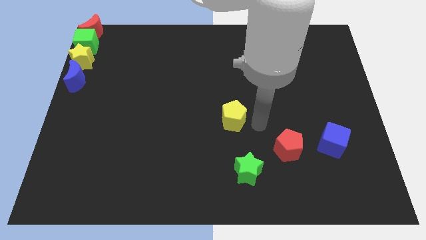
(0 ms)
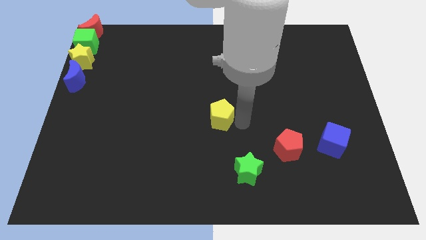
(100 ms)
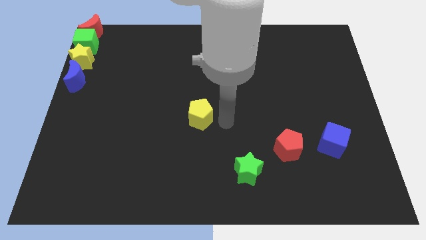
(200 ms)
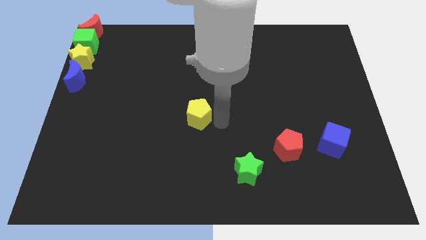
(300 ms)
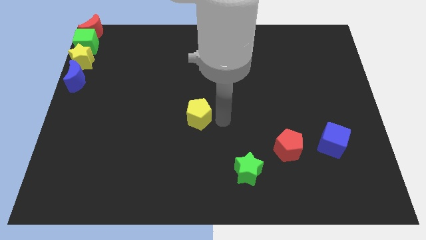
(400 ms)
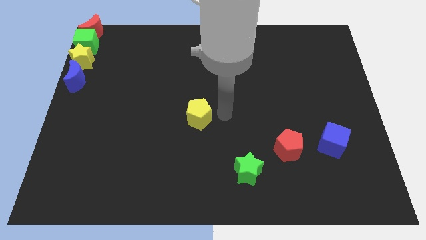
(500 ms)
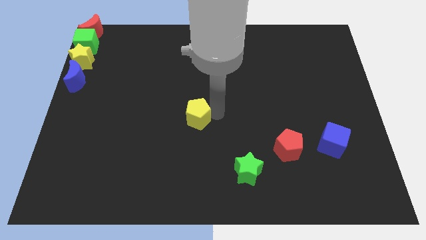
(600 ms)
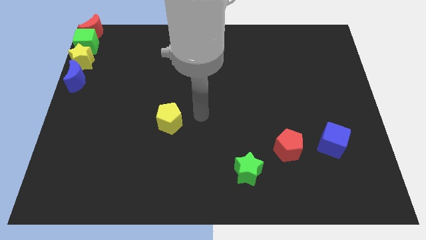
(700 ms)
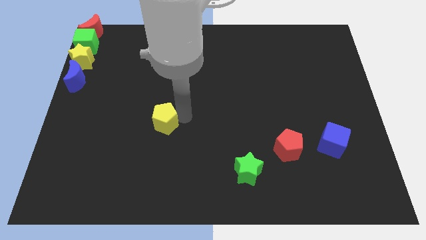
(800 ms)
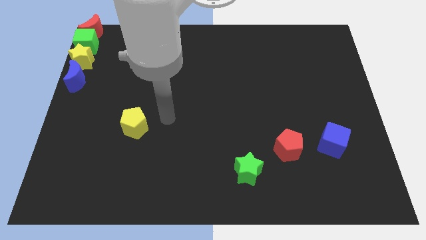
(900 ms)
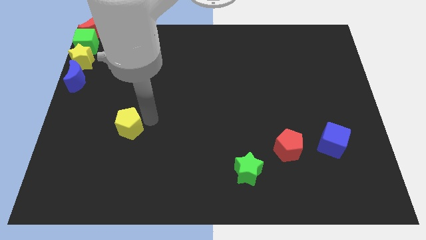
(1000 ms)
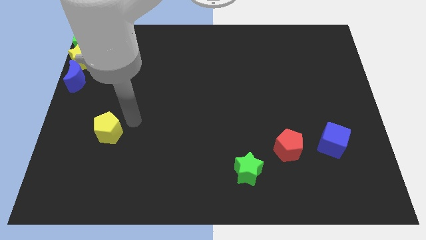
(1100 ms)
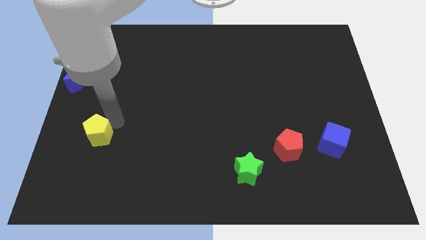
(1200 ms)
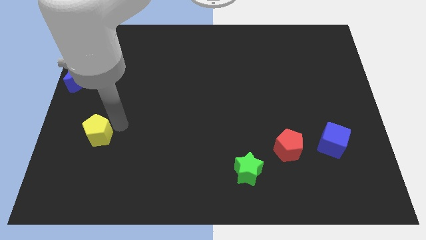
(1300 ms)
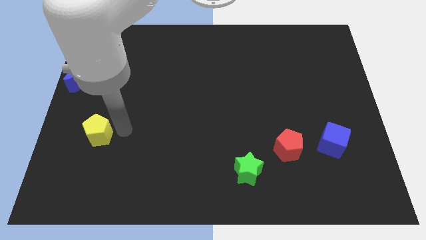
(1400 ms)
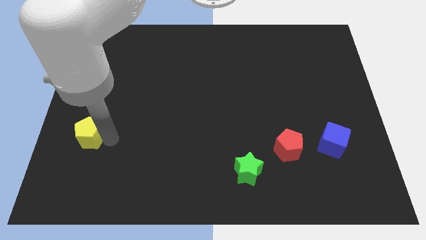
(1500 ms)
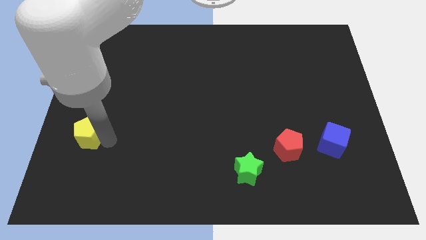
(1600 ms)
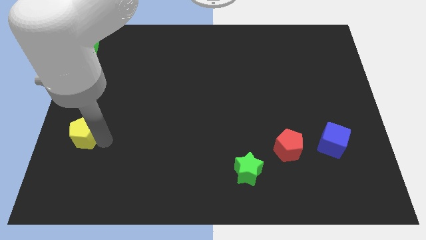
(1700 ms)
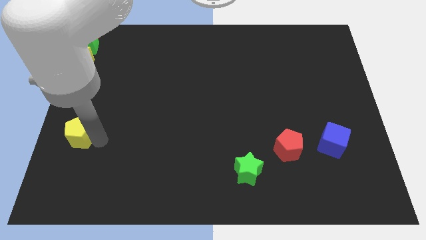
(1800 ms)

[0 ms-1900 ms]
push the yellow pentagon horizontal to the blue cube on the left side

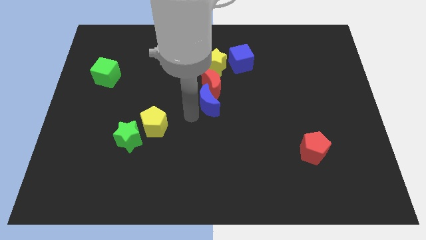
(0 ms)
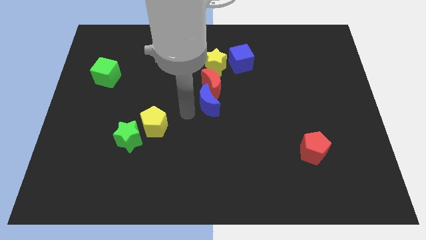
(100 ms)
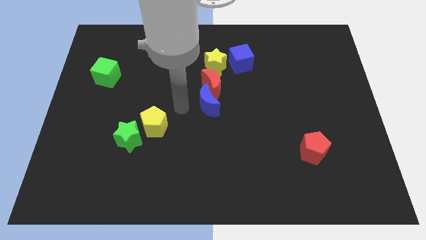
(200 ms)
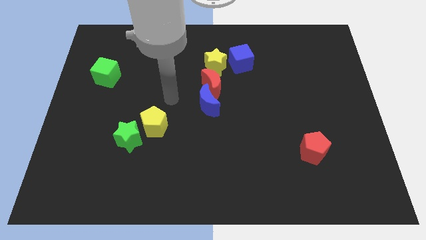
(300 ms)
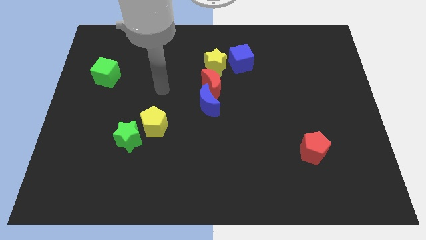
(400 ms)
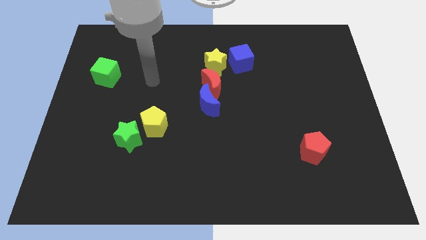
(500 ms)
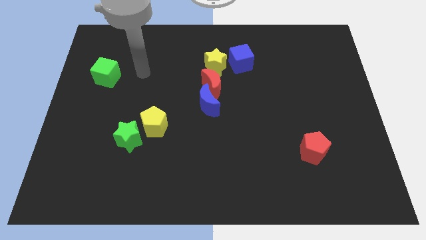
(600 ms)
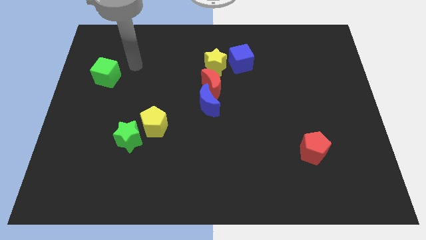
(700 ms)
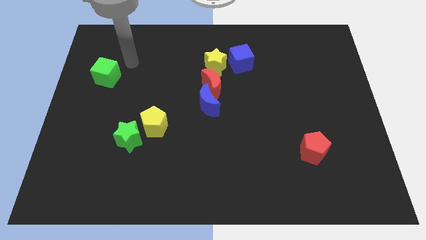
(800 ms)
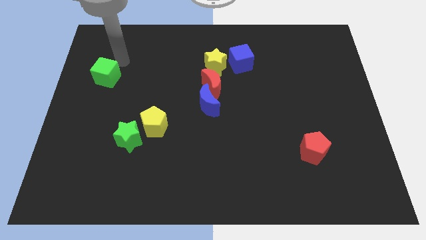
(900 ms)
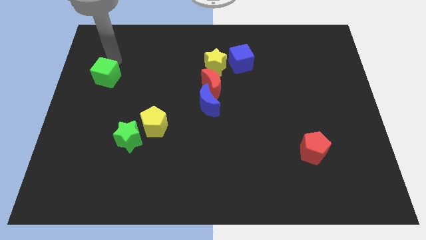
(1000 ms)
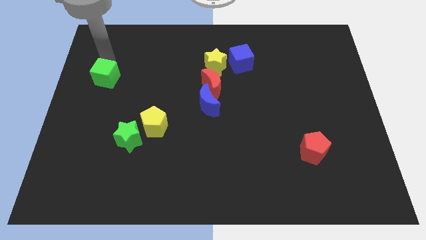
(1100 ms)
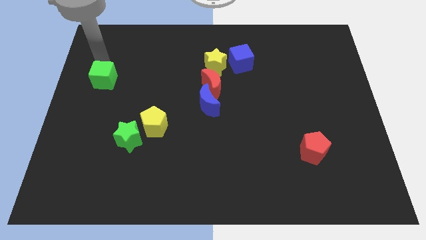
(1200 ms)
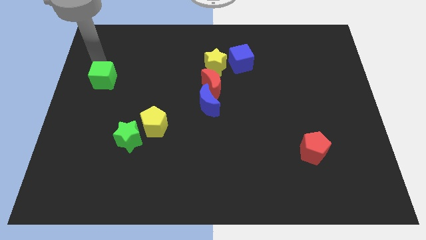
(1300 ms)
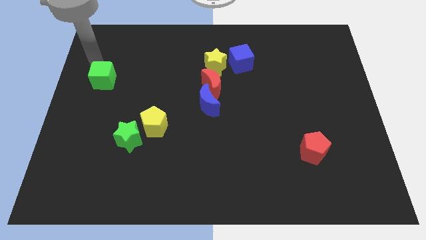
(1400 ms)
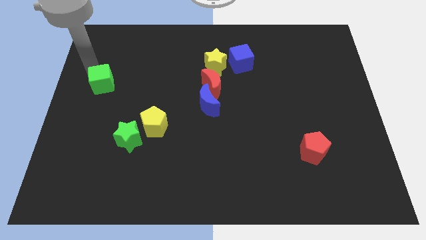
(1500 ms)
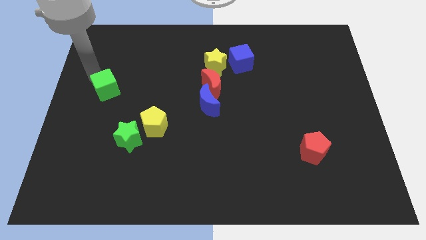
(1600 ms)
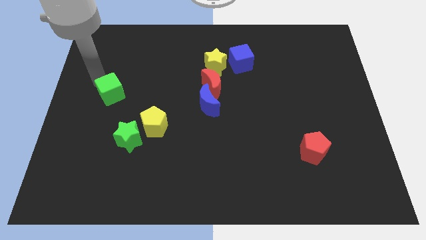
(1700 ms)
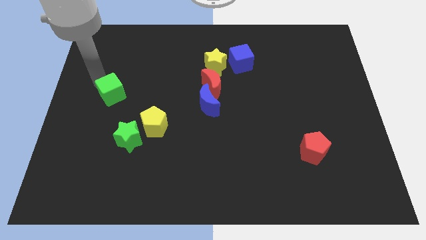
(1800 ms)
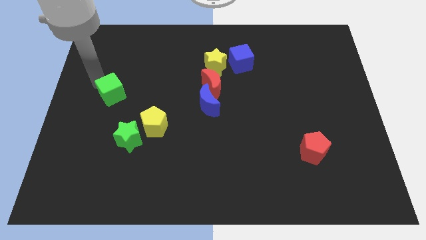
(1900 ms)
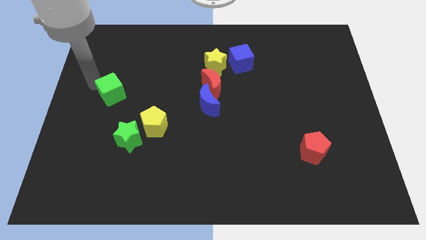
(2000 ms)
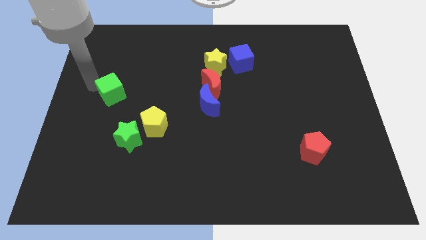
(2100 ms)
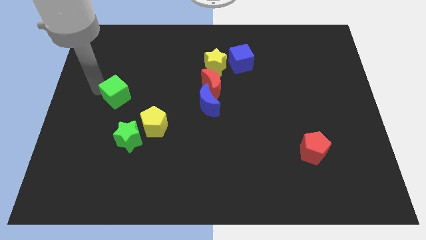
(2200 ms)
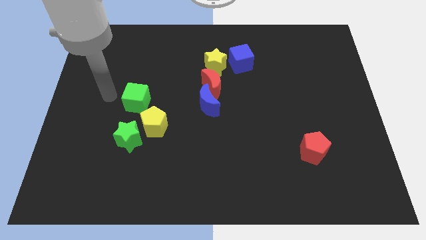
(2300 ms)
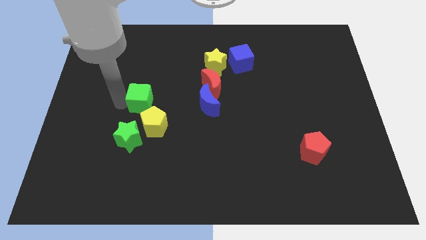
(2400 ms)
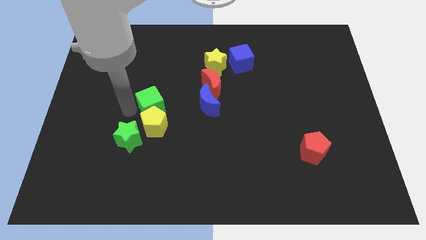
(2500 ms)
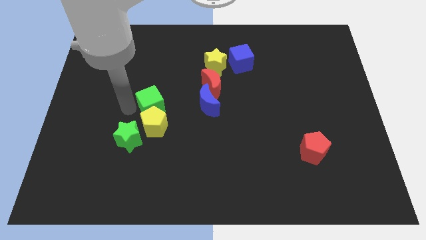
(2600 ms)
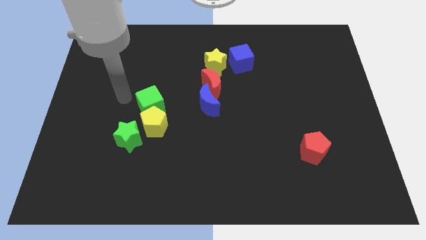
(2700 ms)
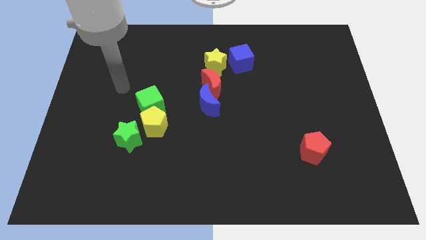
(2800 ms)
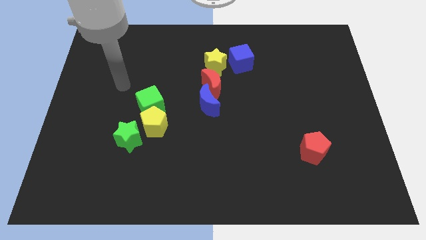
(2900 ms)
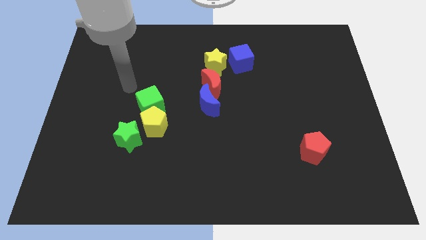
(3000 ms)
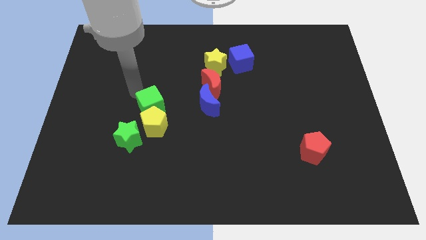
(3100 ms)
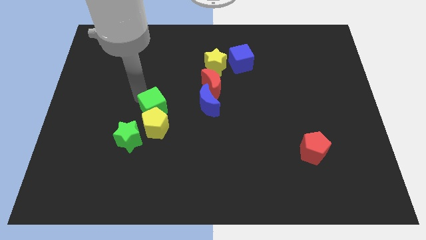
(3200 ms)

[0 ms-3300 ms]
push the green cube to the top of the yellow pentagon

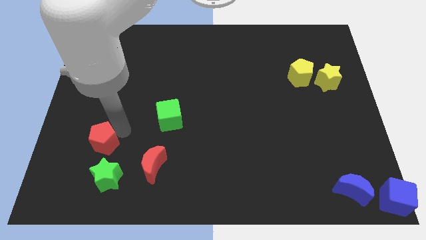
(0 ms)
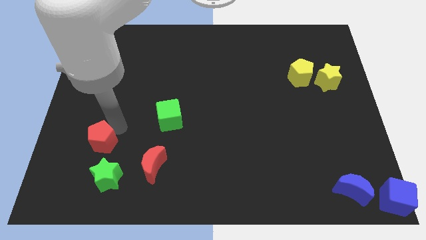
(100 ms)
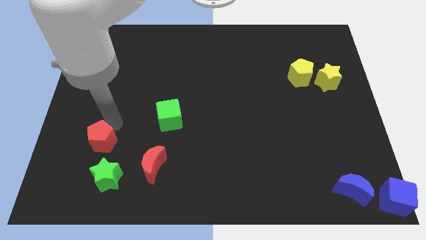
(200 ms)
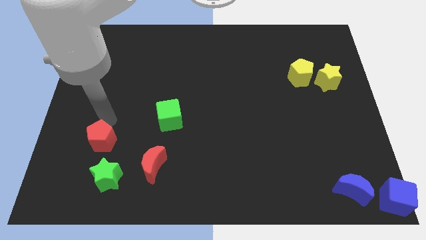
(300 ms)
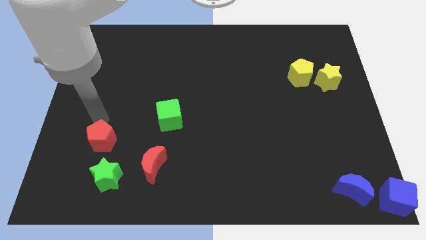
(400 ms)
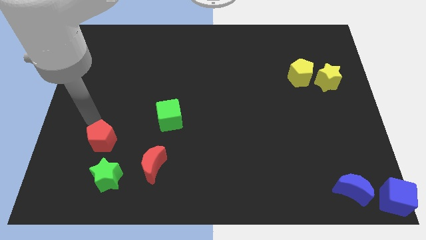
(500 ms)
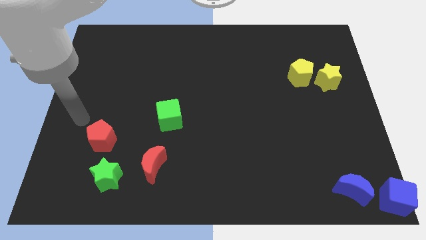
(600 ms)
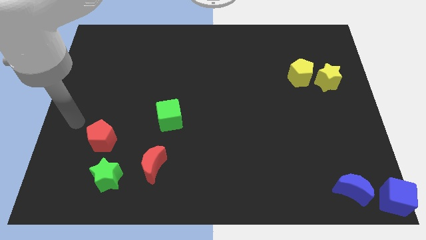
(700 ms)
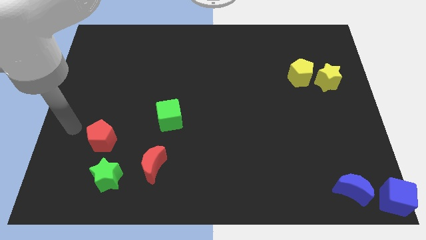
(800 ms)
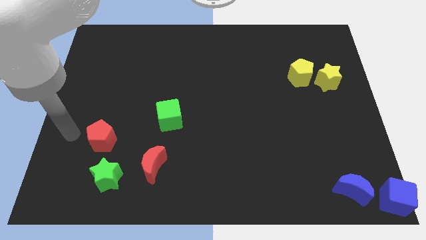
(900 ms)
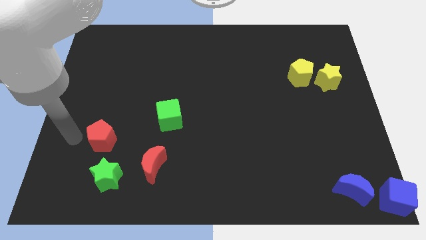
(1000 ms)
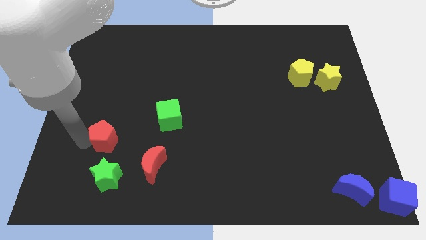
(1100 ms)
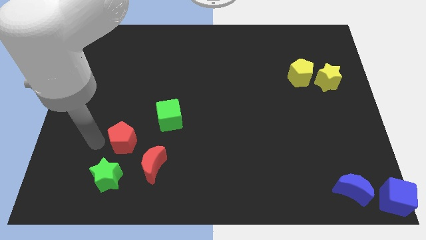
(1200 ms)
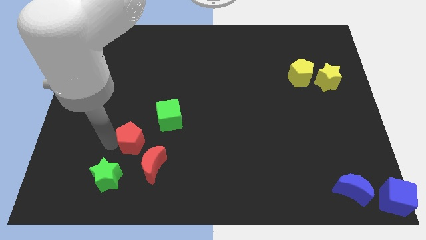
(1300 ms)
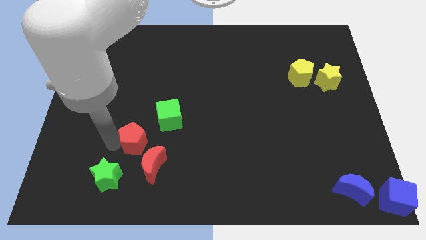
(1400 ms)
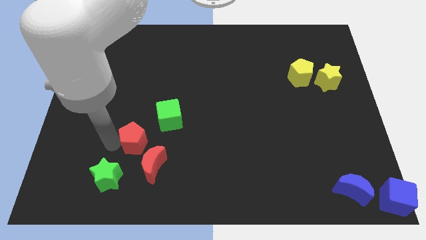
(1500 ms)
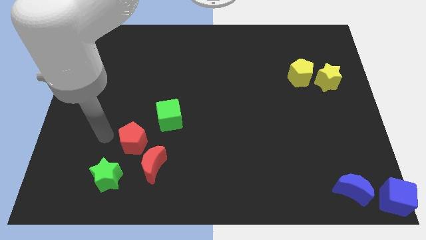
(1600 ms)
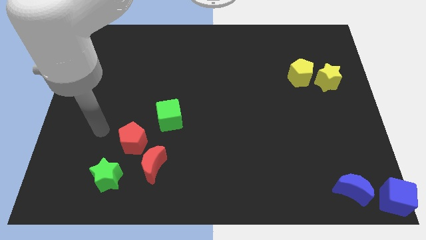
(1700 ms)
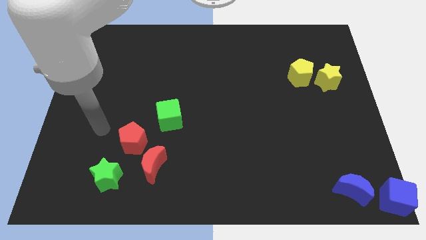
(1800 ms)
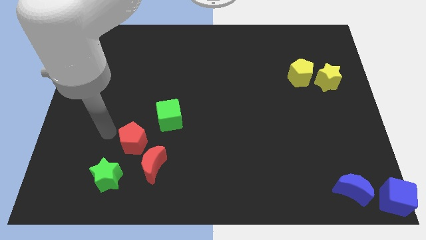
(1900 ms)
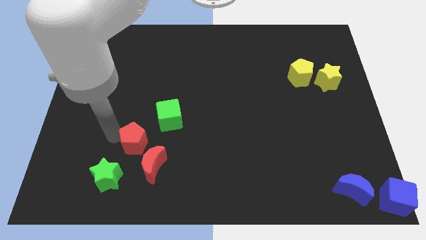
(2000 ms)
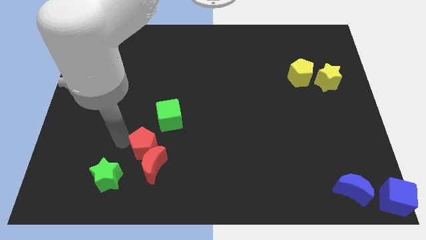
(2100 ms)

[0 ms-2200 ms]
push the red pentagon into the red moon

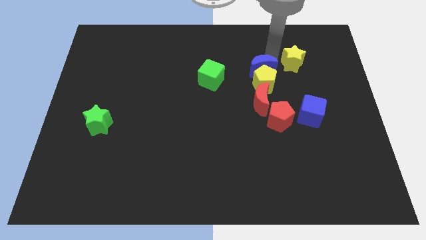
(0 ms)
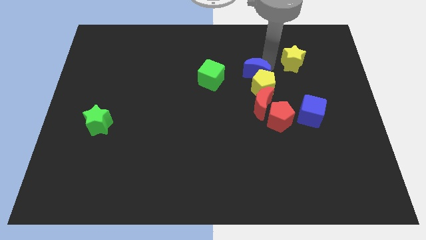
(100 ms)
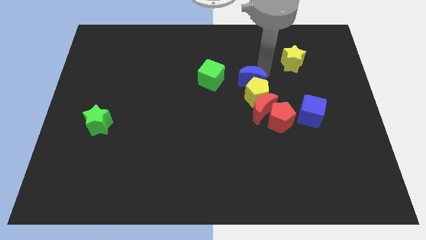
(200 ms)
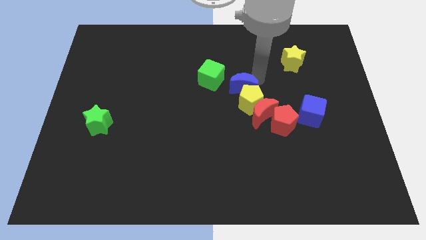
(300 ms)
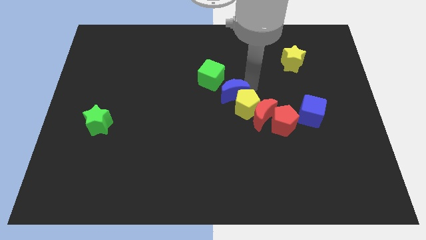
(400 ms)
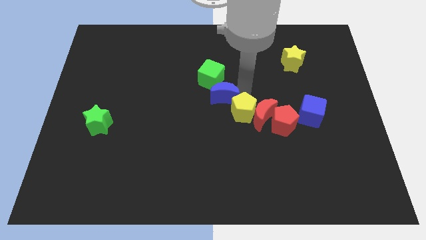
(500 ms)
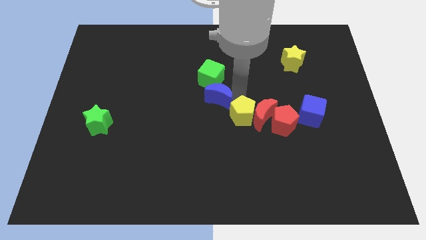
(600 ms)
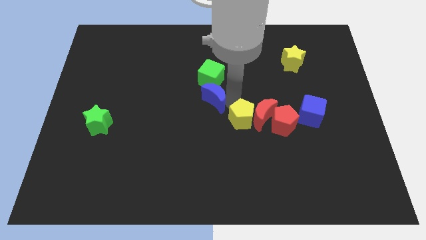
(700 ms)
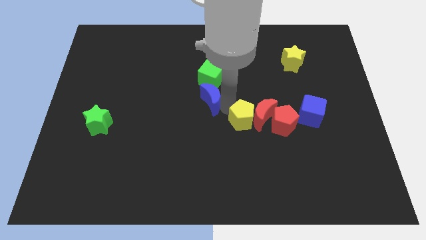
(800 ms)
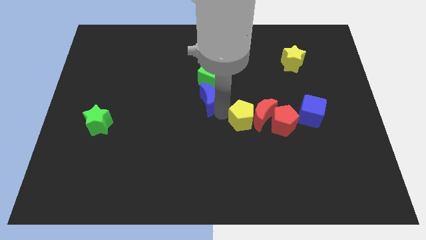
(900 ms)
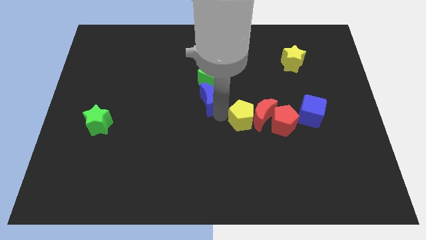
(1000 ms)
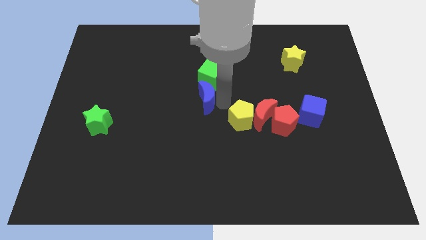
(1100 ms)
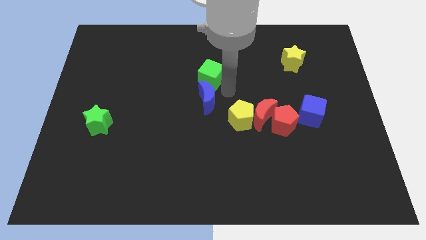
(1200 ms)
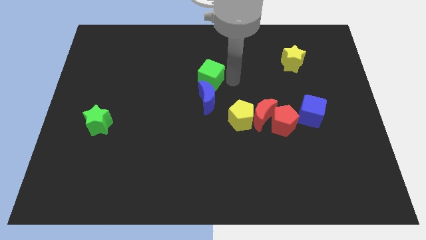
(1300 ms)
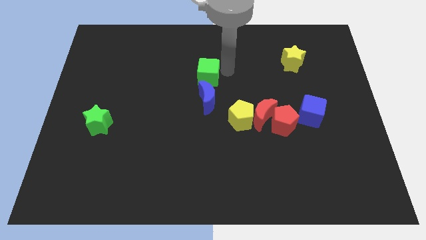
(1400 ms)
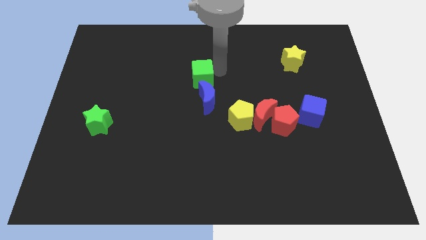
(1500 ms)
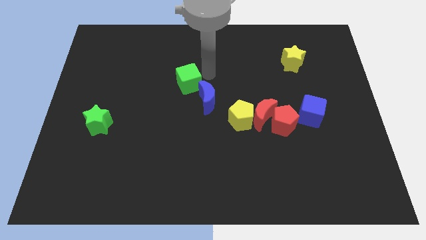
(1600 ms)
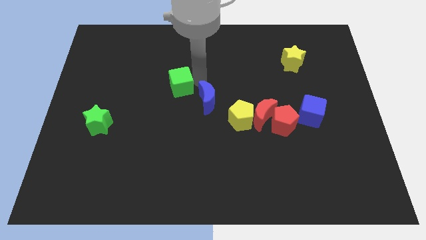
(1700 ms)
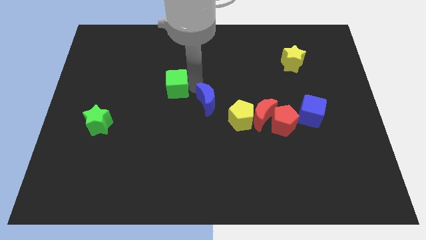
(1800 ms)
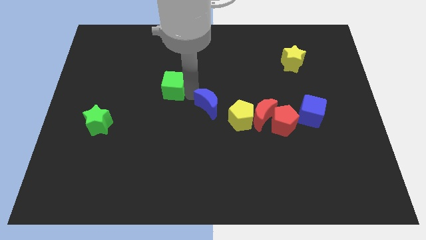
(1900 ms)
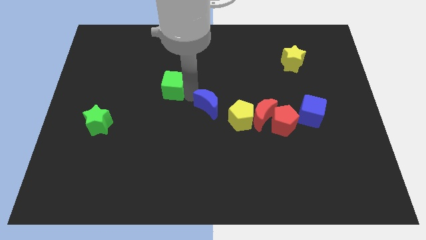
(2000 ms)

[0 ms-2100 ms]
push the blue crescent to the center
